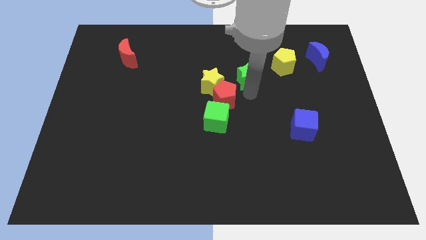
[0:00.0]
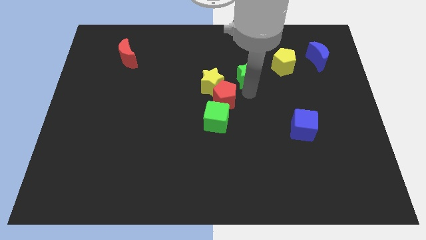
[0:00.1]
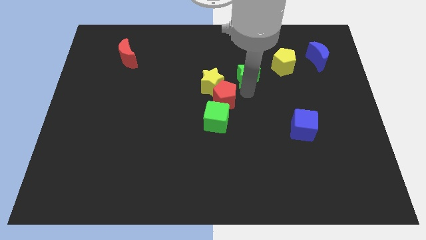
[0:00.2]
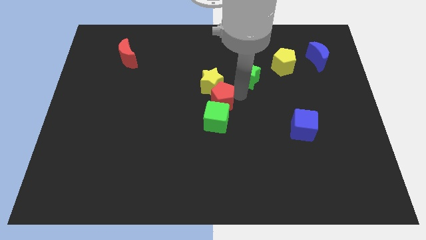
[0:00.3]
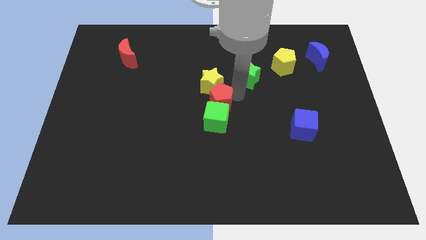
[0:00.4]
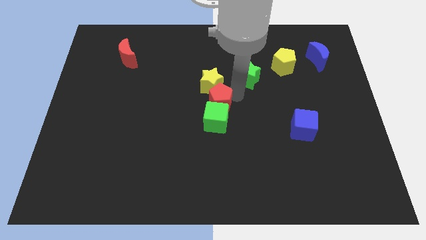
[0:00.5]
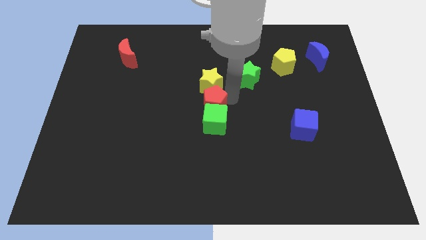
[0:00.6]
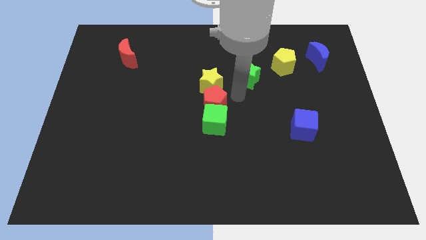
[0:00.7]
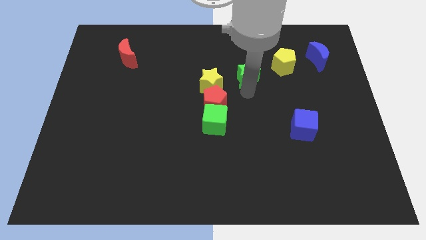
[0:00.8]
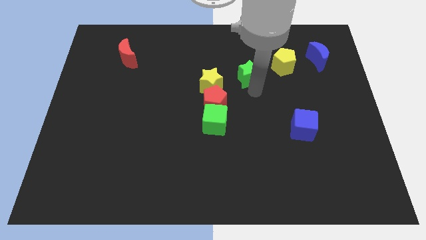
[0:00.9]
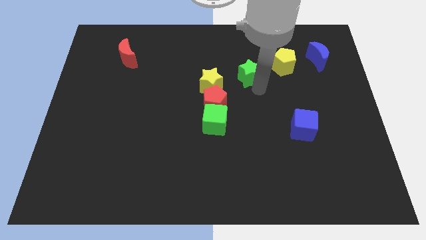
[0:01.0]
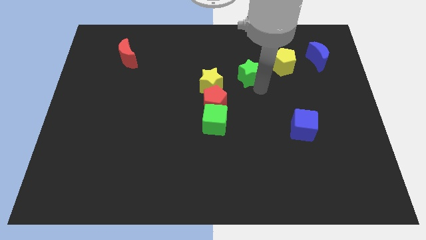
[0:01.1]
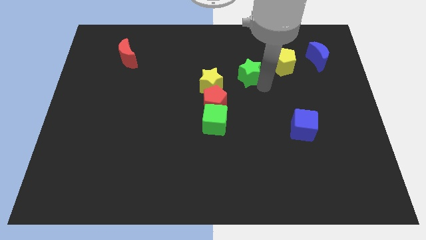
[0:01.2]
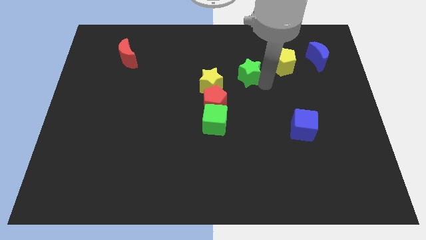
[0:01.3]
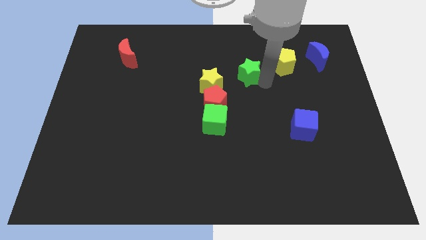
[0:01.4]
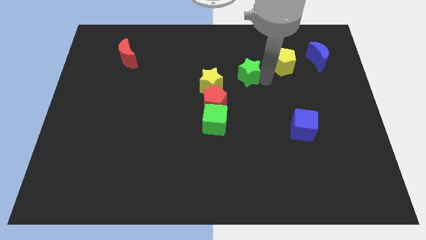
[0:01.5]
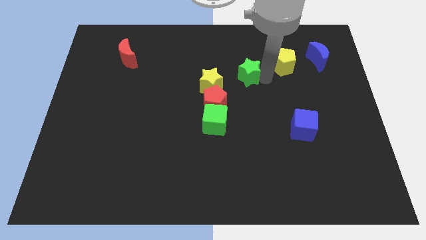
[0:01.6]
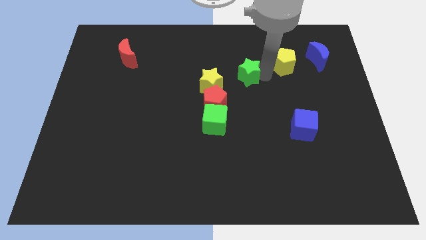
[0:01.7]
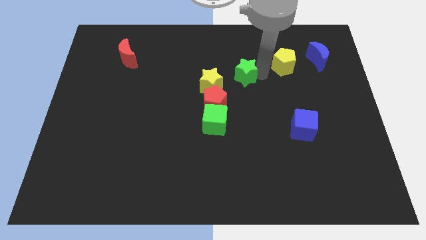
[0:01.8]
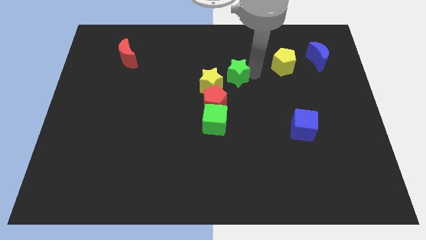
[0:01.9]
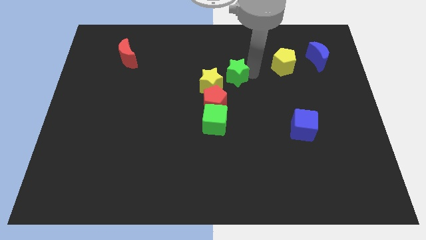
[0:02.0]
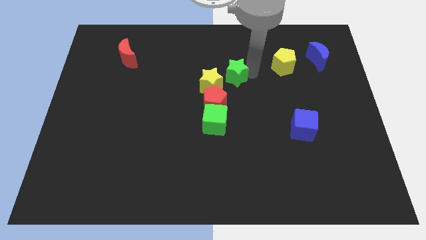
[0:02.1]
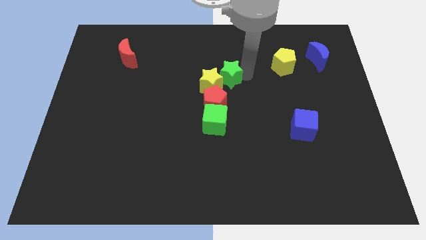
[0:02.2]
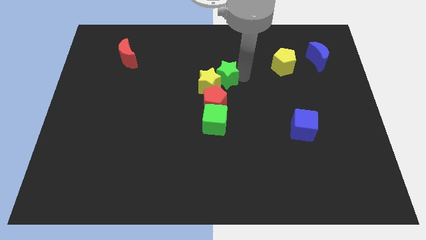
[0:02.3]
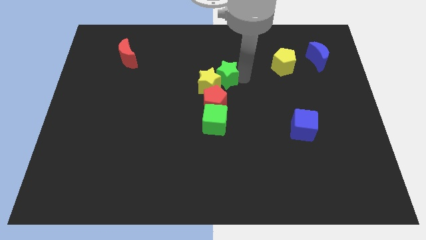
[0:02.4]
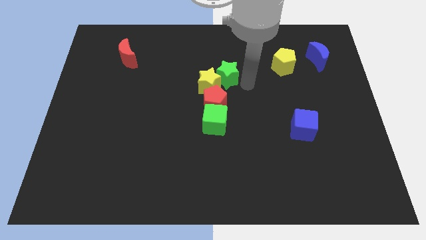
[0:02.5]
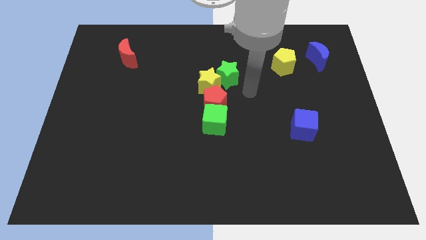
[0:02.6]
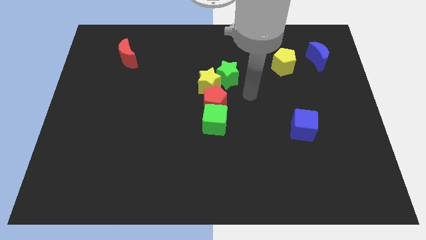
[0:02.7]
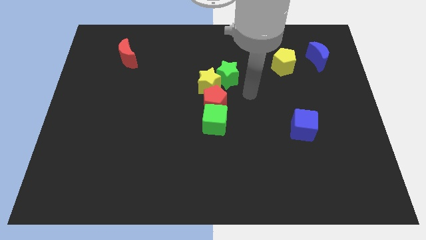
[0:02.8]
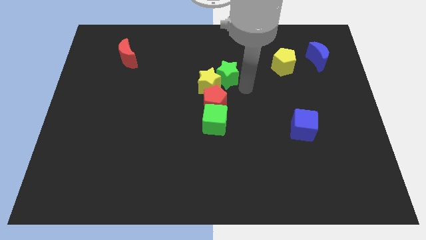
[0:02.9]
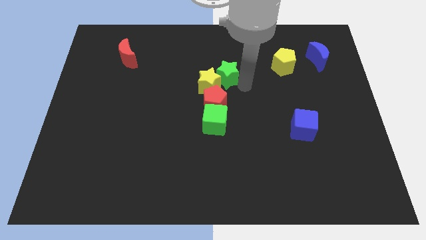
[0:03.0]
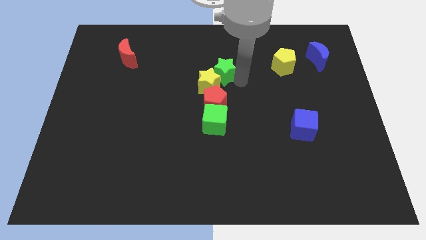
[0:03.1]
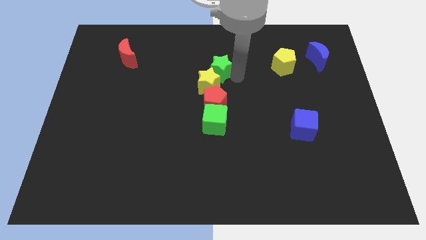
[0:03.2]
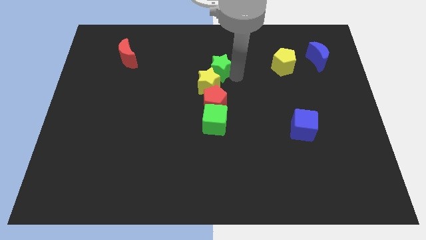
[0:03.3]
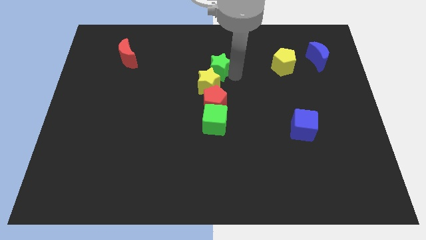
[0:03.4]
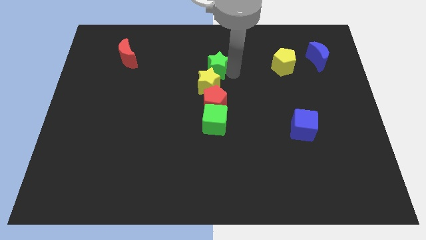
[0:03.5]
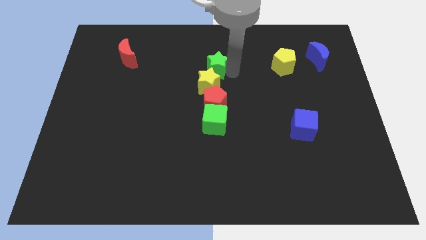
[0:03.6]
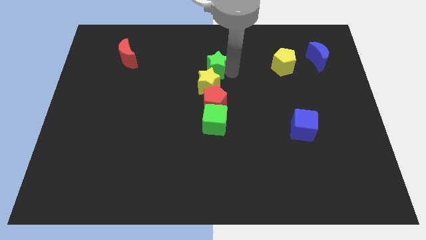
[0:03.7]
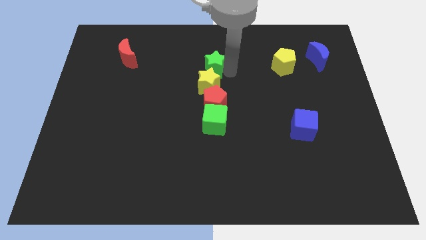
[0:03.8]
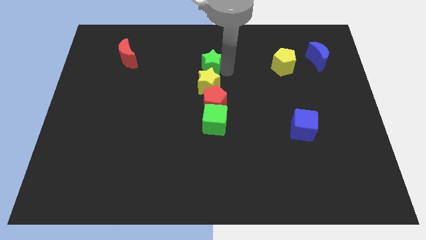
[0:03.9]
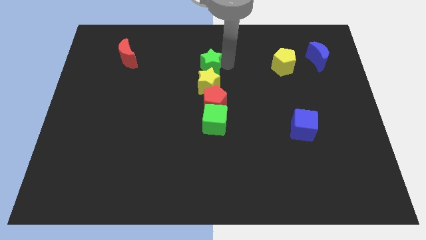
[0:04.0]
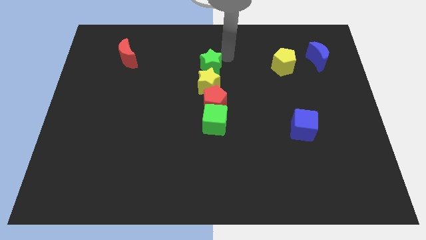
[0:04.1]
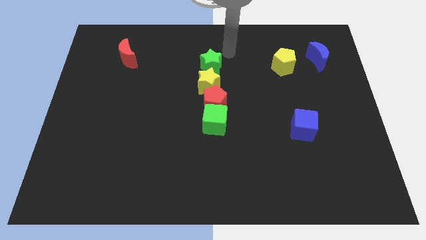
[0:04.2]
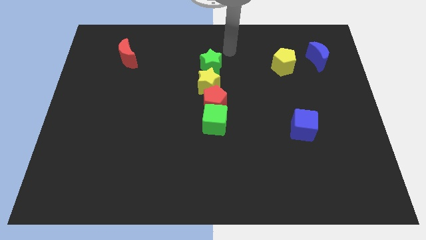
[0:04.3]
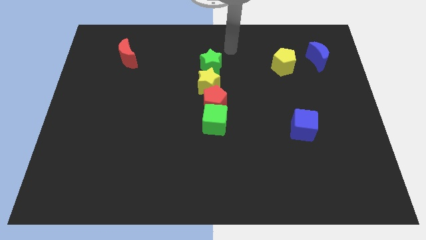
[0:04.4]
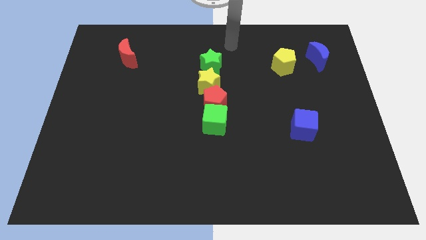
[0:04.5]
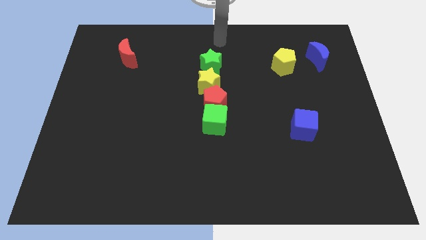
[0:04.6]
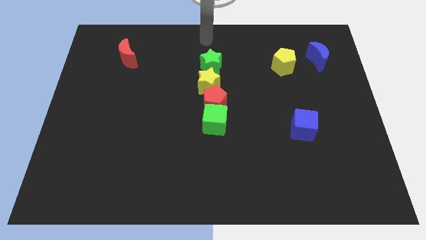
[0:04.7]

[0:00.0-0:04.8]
place the green star left to the yellow pentagon

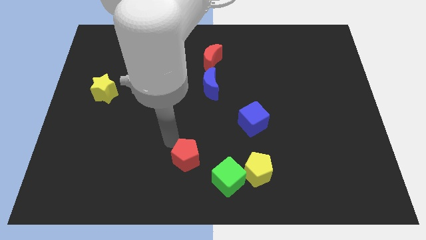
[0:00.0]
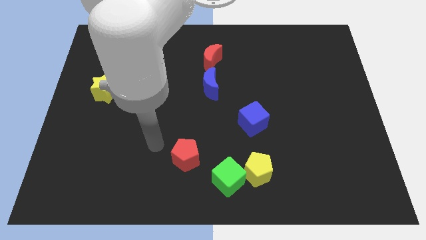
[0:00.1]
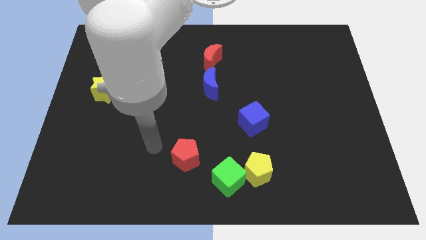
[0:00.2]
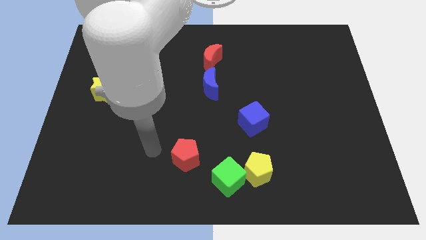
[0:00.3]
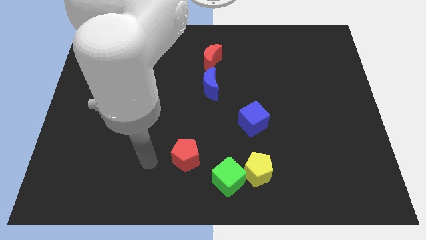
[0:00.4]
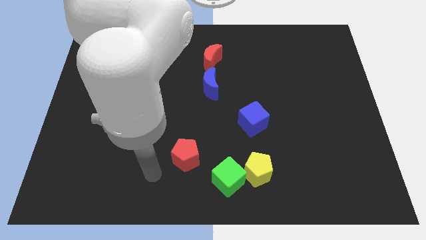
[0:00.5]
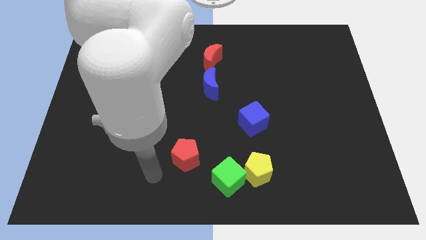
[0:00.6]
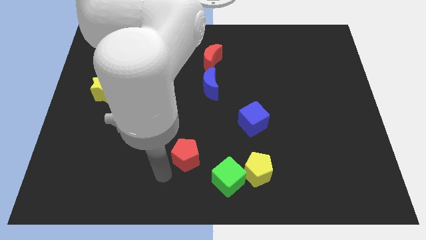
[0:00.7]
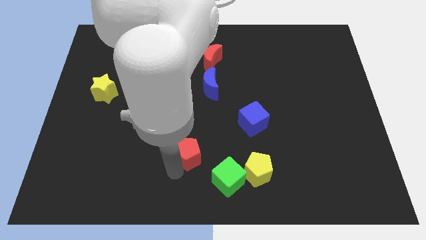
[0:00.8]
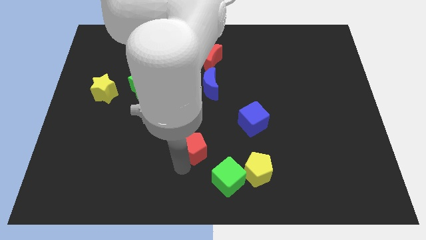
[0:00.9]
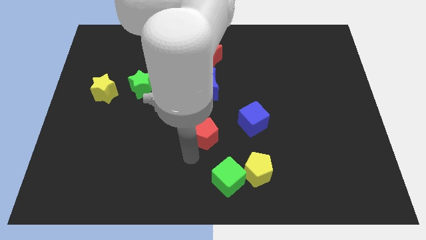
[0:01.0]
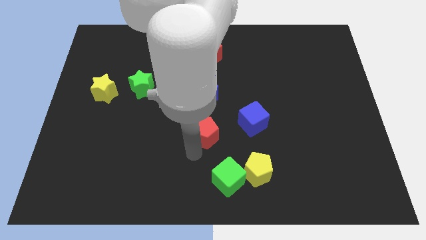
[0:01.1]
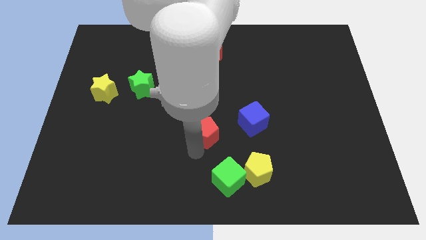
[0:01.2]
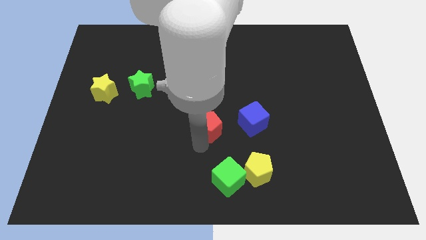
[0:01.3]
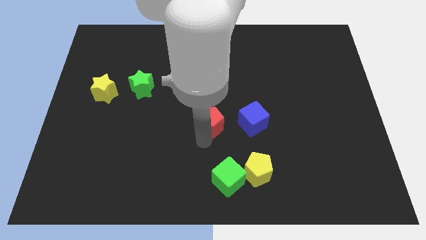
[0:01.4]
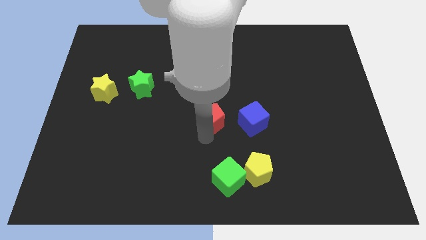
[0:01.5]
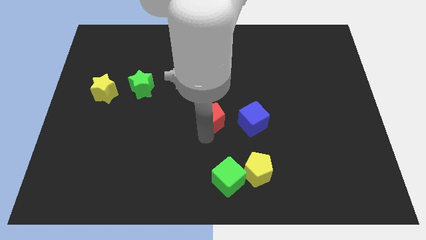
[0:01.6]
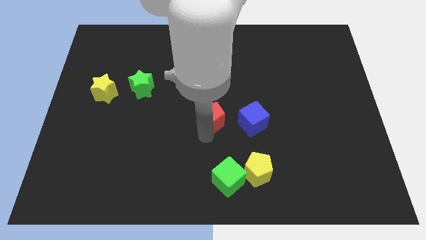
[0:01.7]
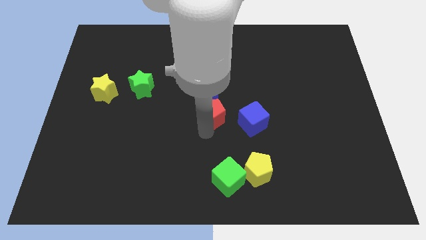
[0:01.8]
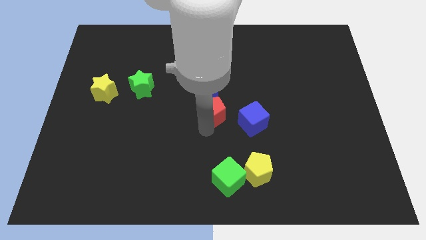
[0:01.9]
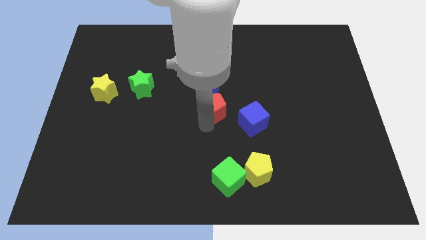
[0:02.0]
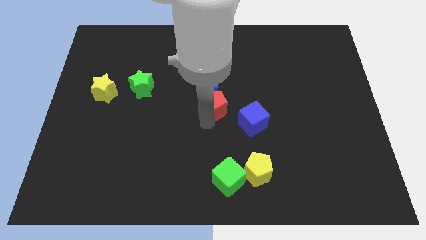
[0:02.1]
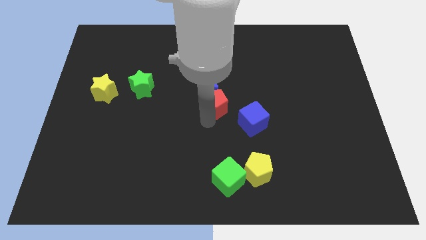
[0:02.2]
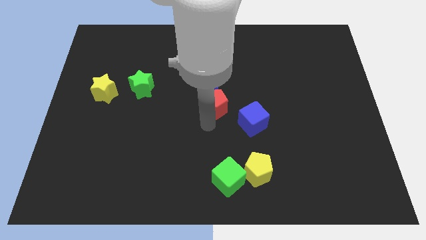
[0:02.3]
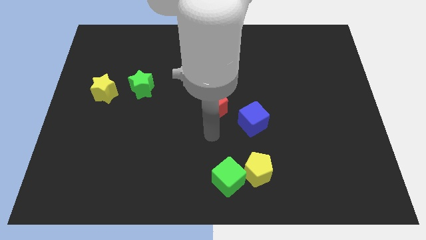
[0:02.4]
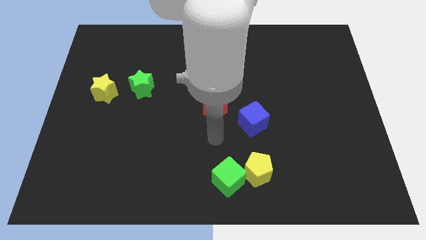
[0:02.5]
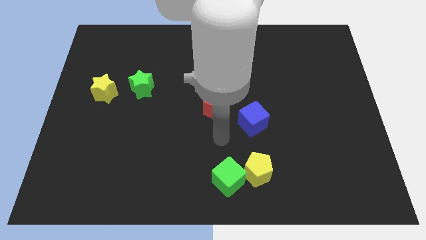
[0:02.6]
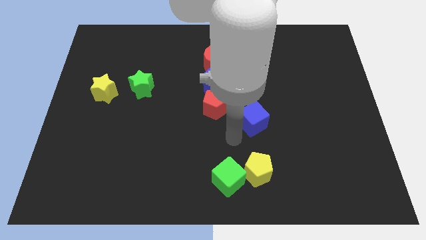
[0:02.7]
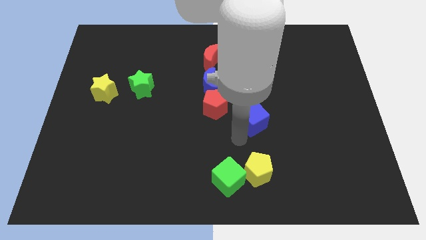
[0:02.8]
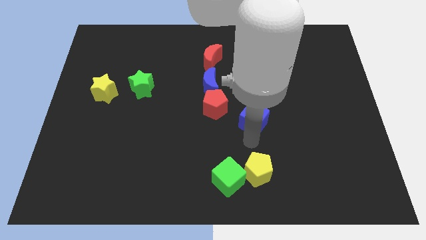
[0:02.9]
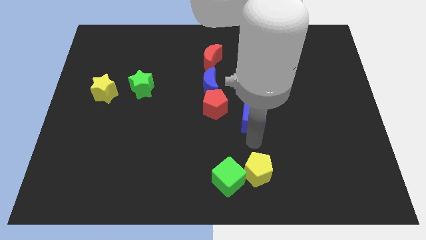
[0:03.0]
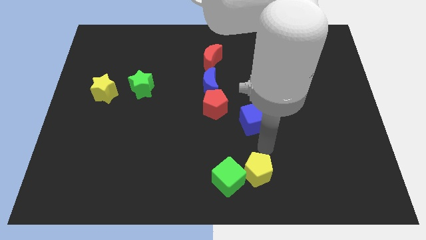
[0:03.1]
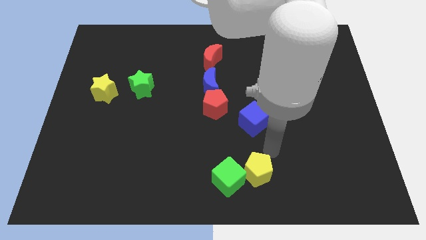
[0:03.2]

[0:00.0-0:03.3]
tap the blue block slightly with the arm

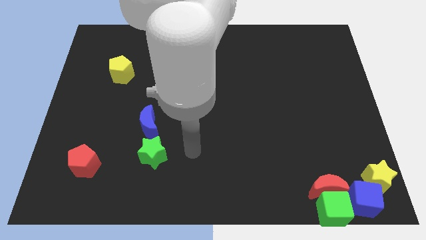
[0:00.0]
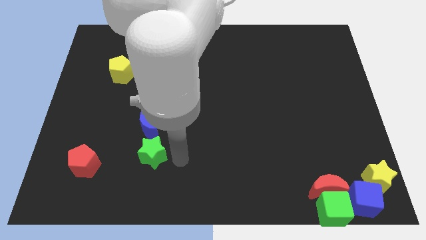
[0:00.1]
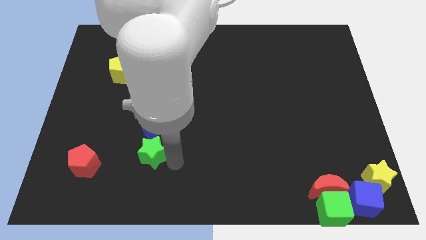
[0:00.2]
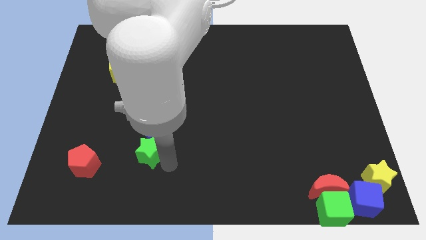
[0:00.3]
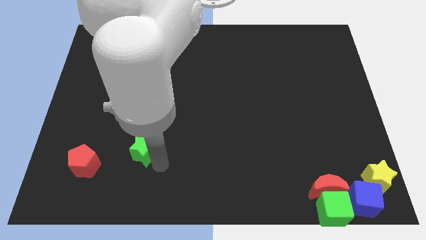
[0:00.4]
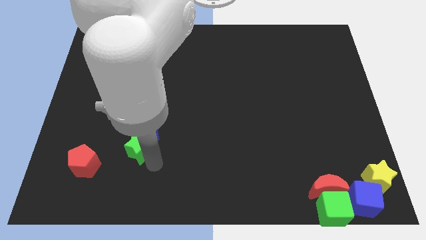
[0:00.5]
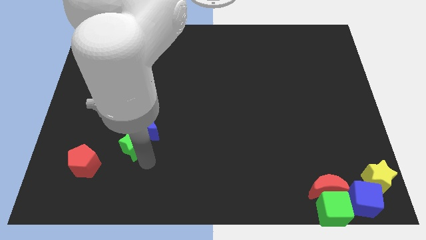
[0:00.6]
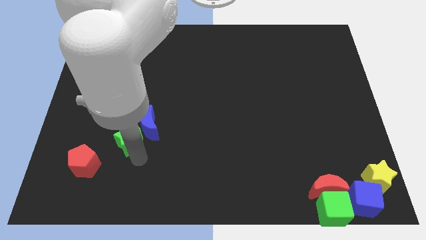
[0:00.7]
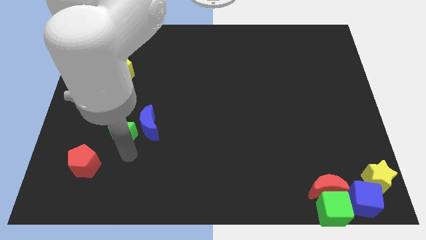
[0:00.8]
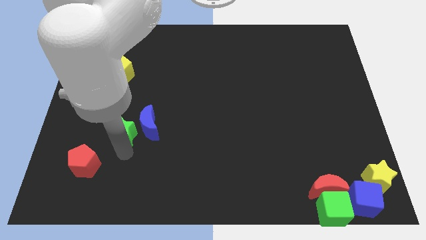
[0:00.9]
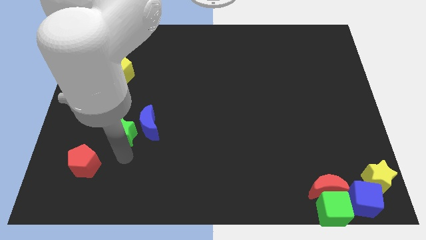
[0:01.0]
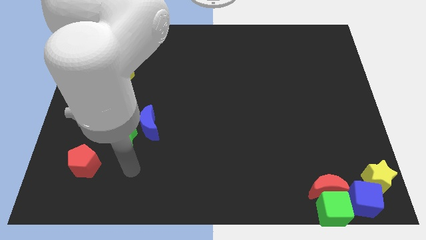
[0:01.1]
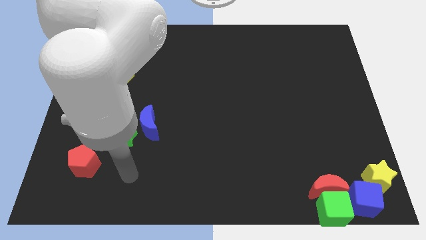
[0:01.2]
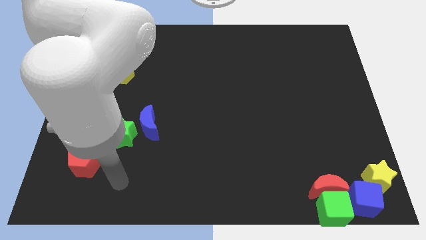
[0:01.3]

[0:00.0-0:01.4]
push the green star to the left of the blue crescent
